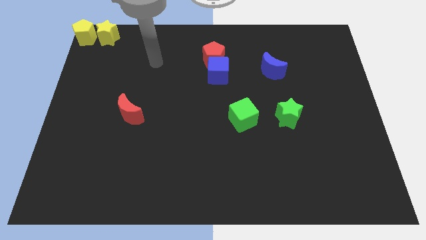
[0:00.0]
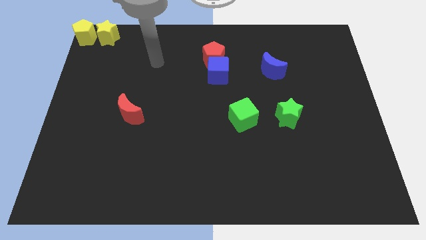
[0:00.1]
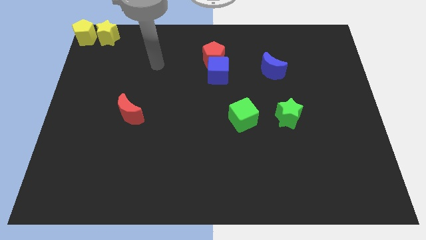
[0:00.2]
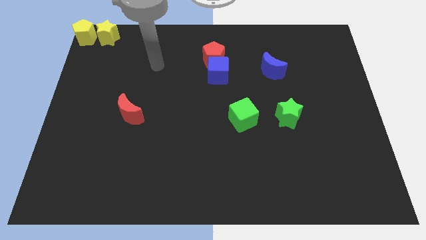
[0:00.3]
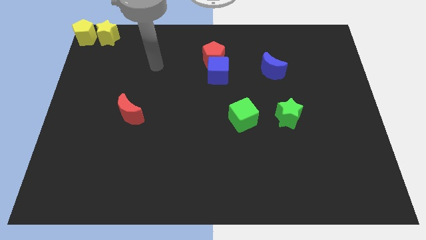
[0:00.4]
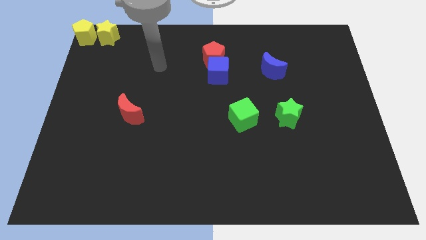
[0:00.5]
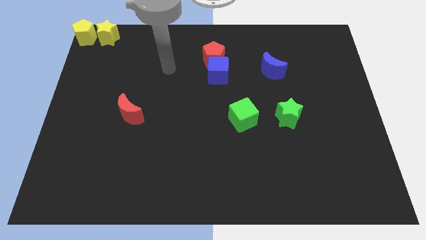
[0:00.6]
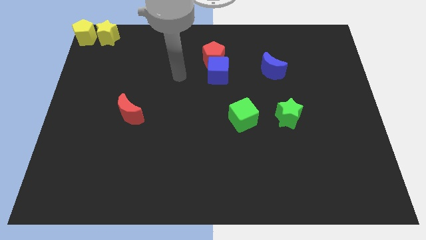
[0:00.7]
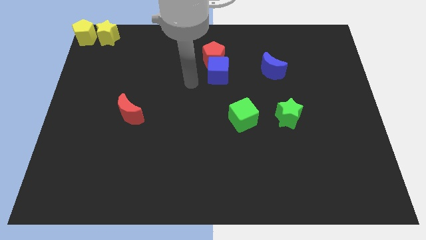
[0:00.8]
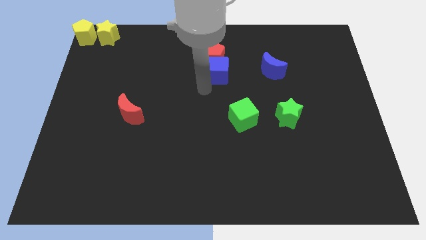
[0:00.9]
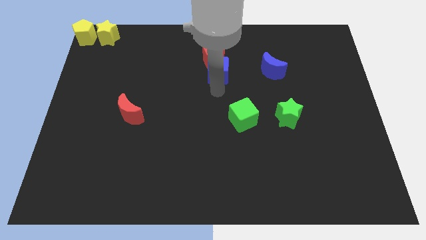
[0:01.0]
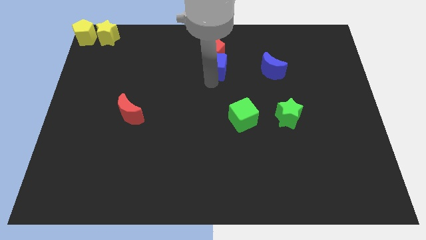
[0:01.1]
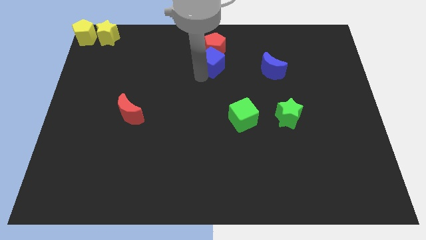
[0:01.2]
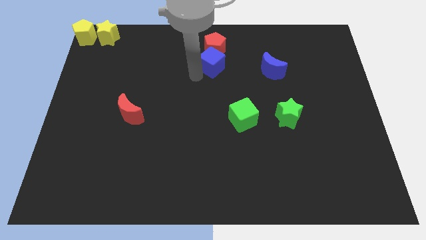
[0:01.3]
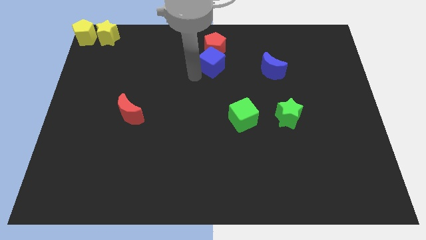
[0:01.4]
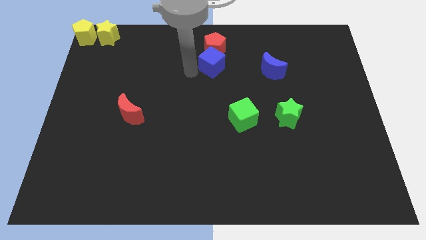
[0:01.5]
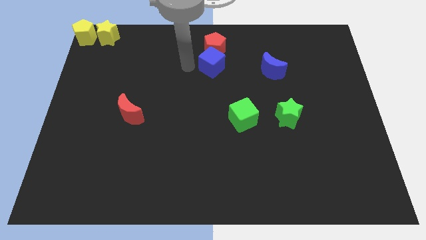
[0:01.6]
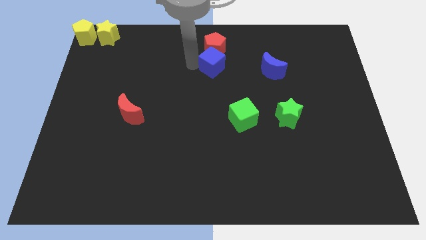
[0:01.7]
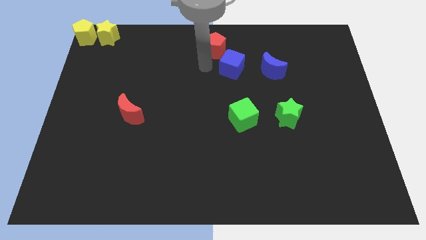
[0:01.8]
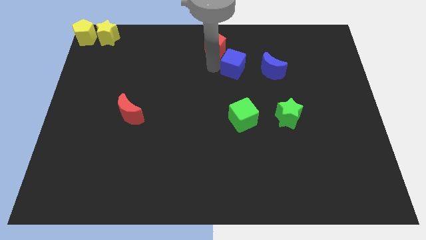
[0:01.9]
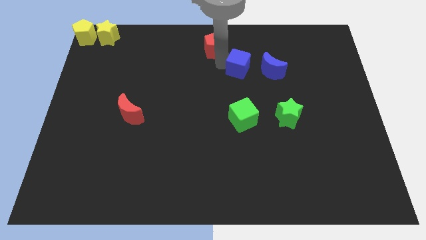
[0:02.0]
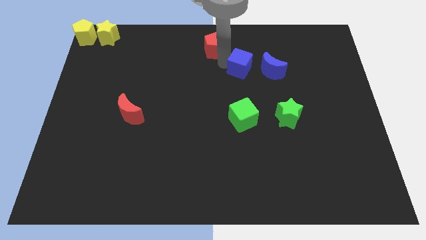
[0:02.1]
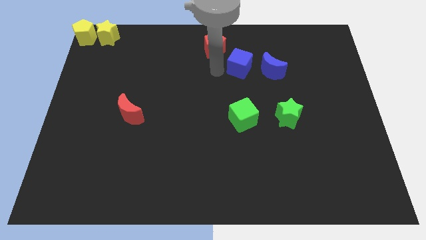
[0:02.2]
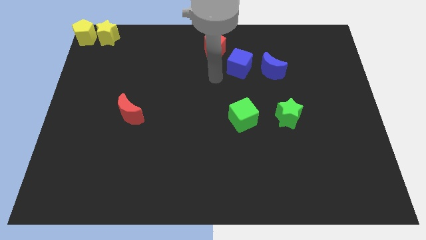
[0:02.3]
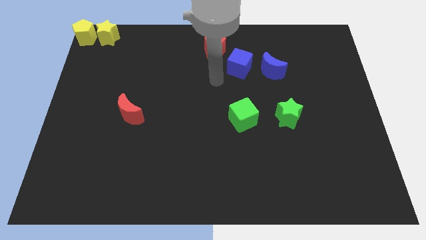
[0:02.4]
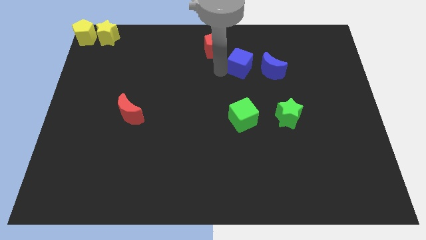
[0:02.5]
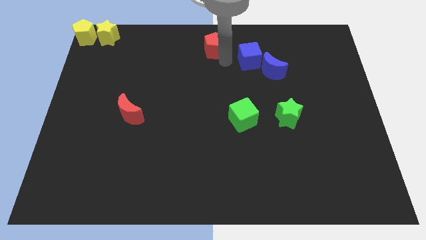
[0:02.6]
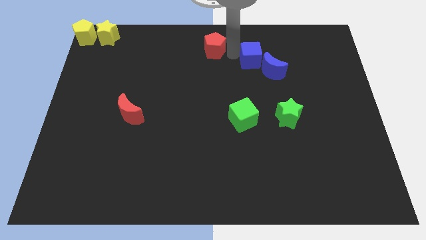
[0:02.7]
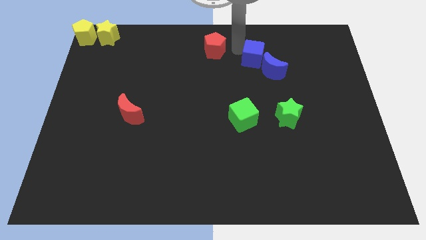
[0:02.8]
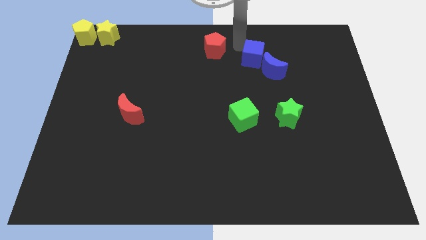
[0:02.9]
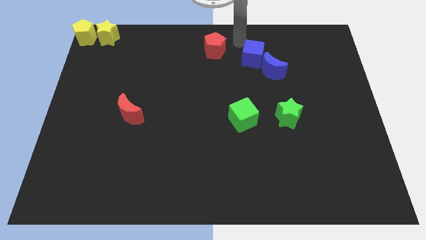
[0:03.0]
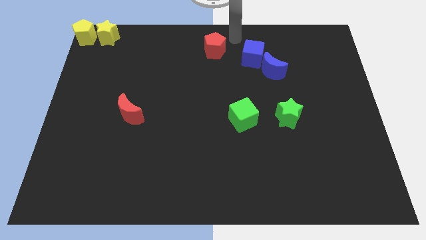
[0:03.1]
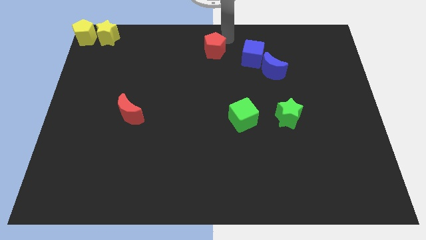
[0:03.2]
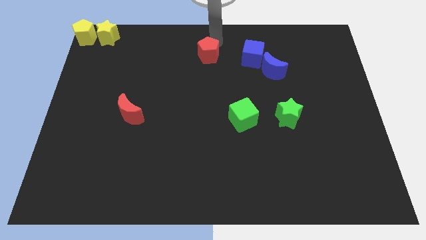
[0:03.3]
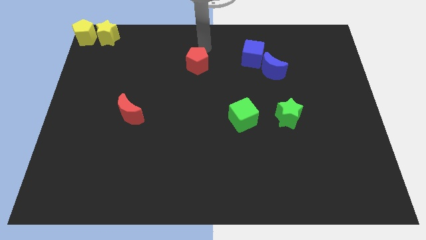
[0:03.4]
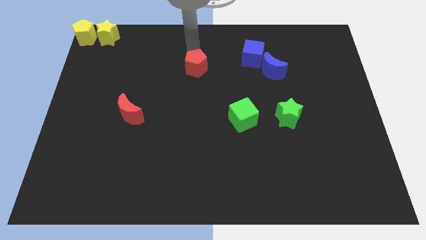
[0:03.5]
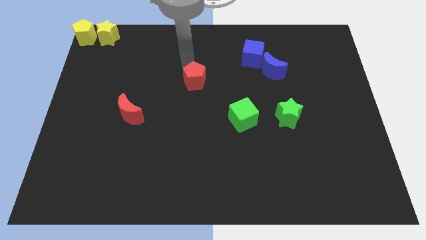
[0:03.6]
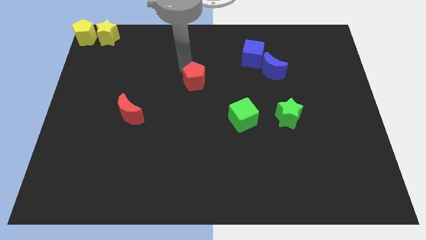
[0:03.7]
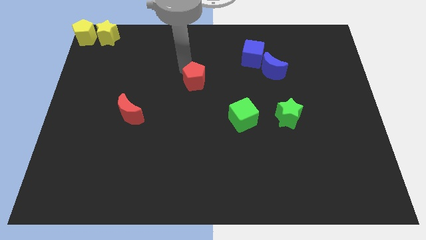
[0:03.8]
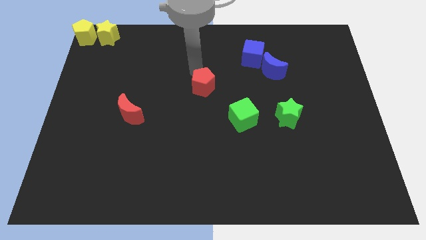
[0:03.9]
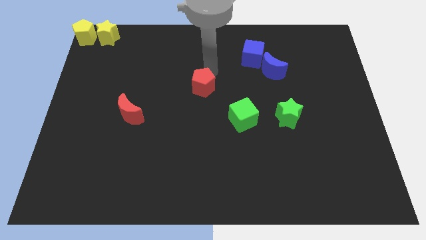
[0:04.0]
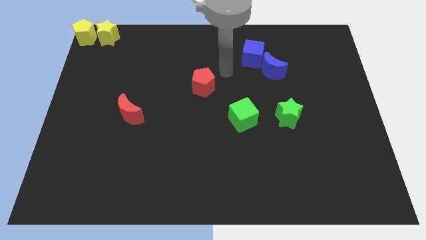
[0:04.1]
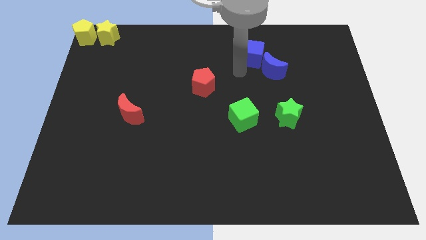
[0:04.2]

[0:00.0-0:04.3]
move the blue block away from the red pentagon

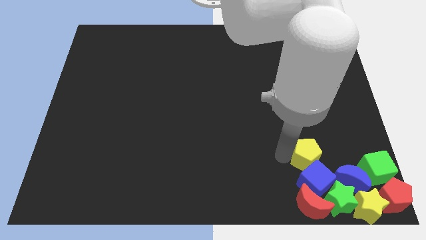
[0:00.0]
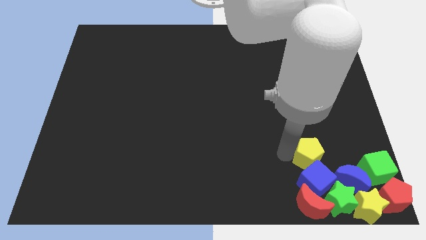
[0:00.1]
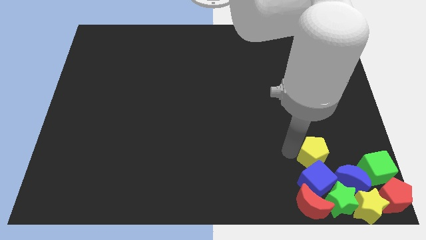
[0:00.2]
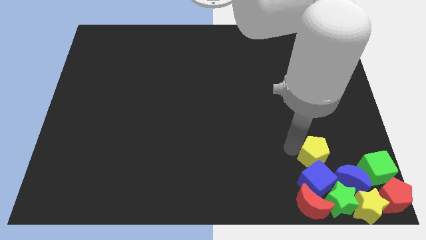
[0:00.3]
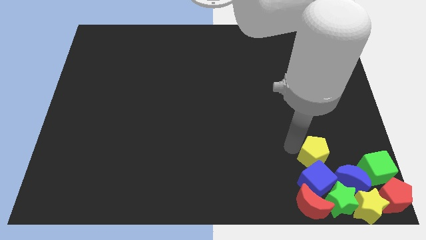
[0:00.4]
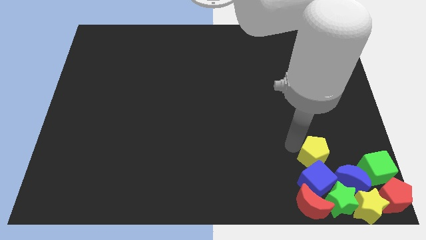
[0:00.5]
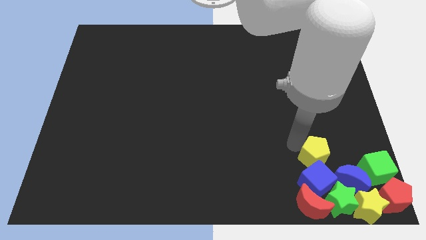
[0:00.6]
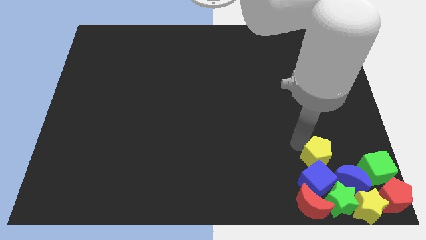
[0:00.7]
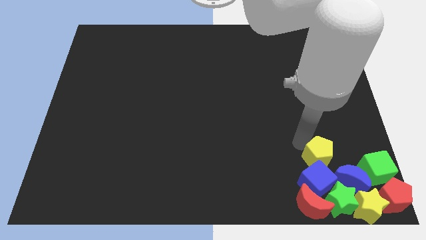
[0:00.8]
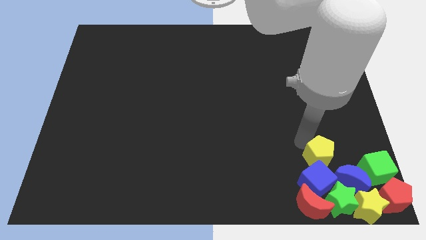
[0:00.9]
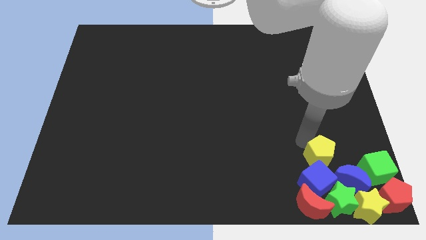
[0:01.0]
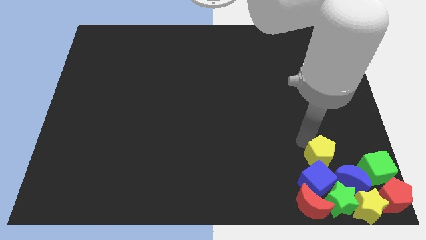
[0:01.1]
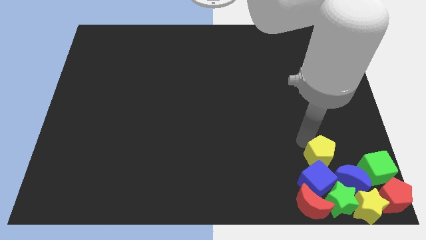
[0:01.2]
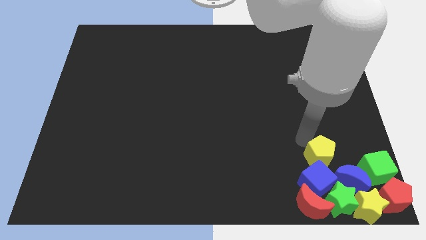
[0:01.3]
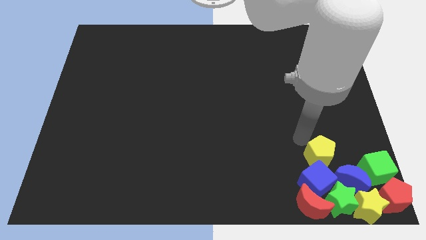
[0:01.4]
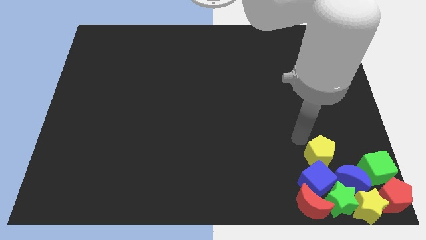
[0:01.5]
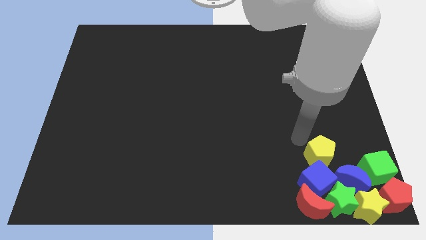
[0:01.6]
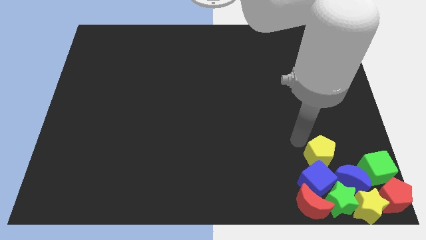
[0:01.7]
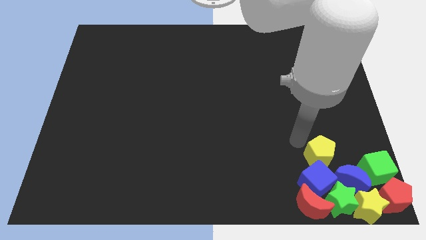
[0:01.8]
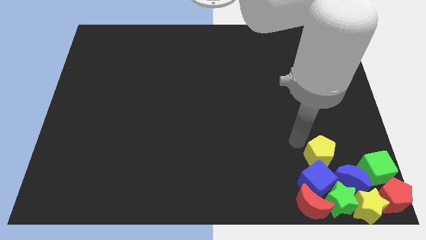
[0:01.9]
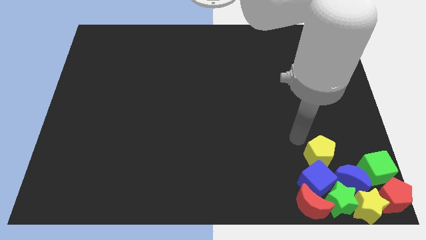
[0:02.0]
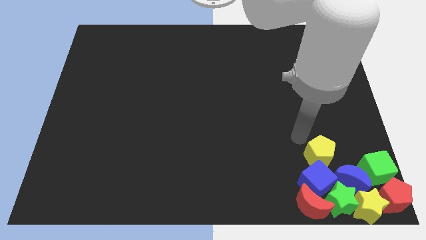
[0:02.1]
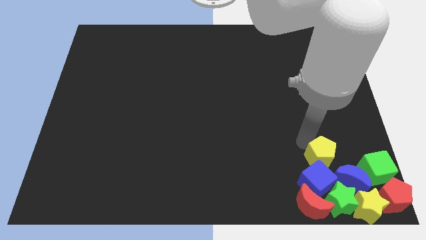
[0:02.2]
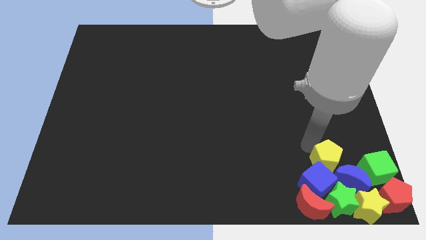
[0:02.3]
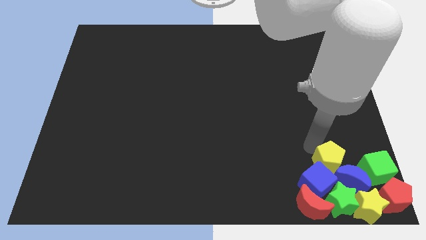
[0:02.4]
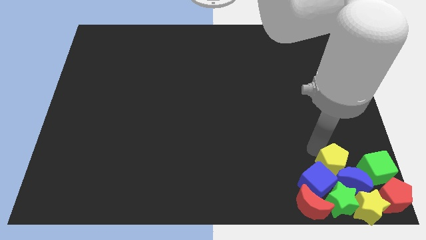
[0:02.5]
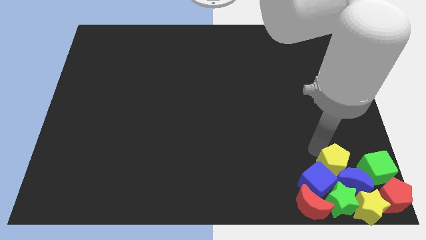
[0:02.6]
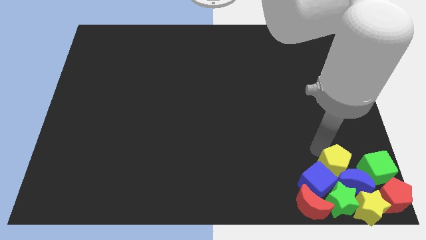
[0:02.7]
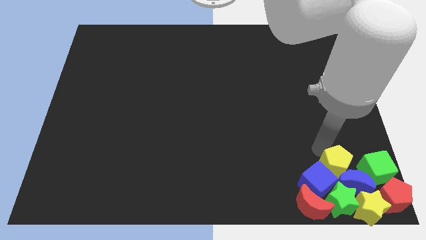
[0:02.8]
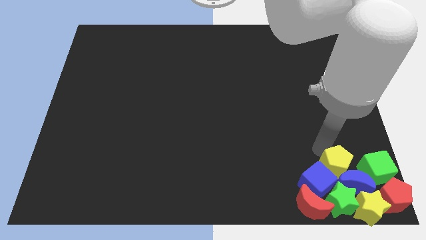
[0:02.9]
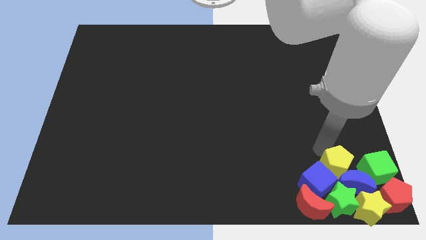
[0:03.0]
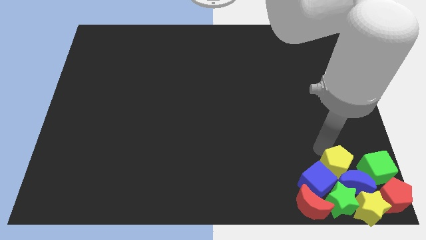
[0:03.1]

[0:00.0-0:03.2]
move the yellow pentagon to the top of blue crescent

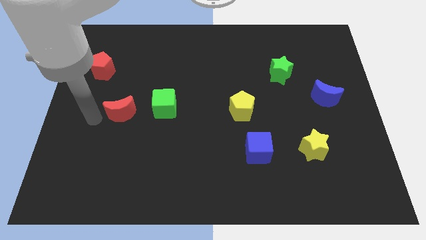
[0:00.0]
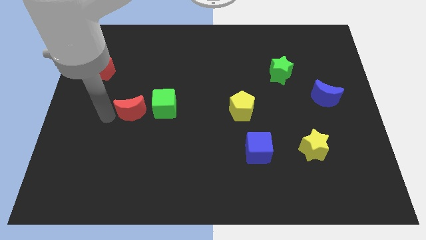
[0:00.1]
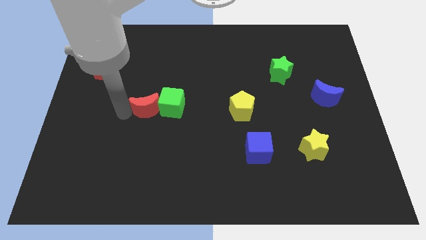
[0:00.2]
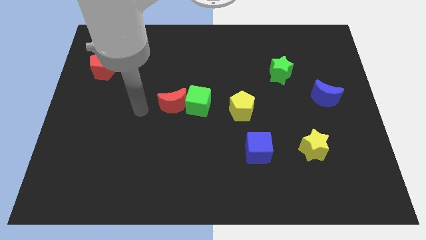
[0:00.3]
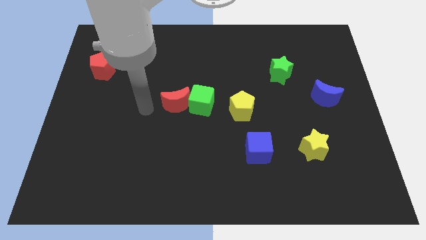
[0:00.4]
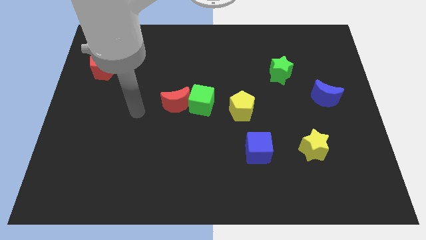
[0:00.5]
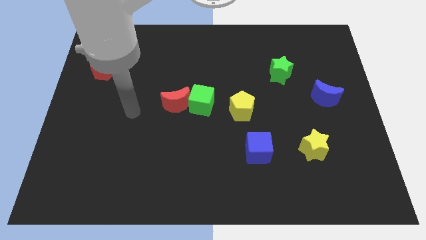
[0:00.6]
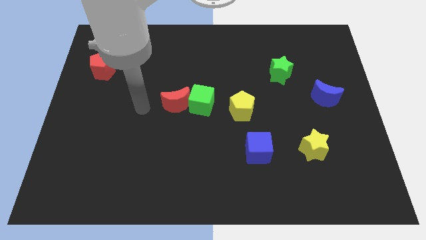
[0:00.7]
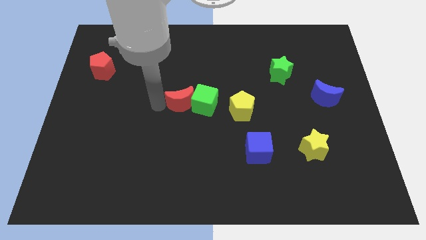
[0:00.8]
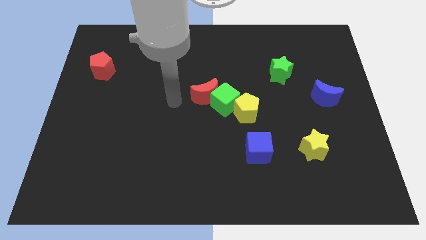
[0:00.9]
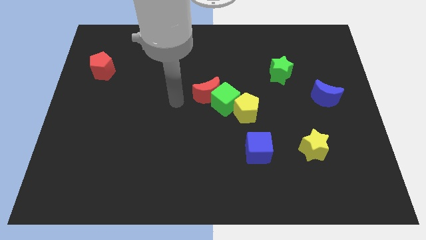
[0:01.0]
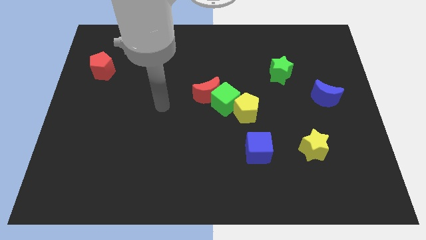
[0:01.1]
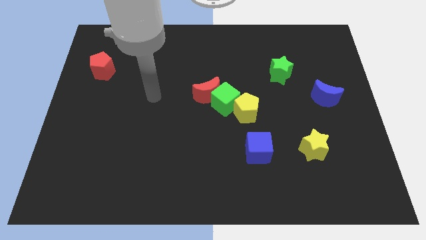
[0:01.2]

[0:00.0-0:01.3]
move the green cube and red crescent into the yellow pentagon

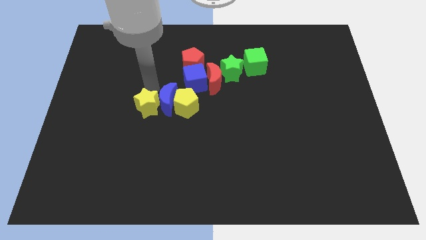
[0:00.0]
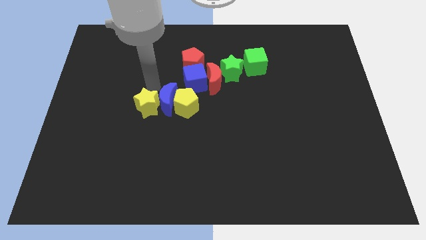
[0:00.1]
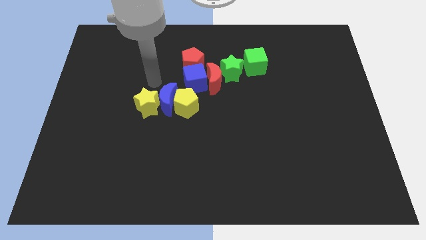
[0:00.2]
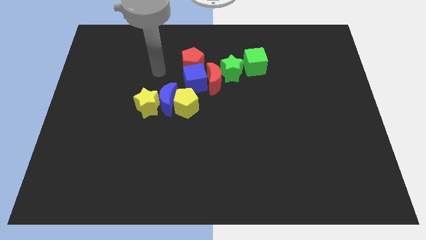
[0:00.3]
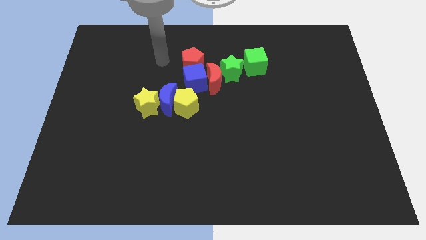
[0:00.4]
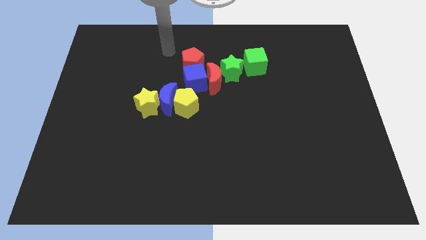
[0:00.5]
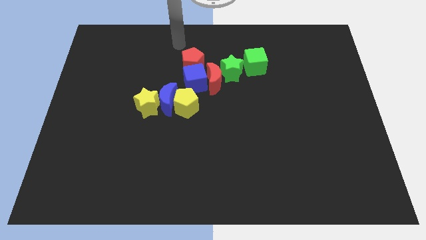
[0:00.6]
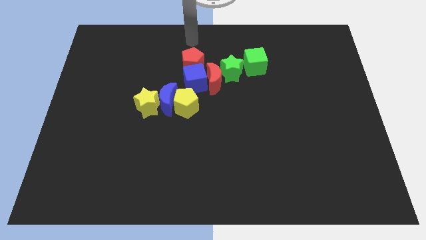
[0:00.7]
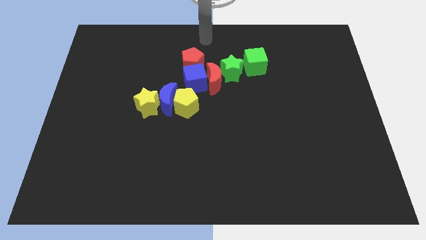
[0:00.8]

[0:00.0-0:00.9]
place your arm to the top of the red pentagon
